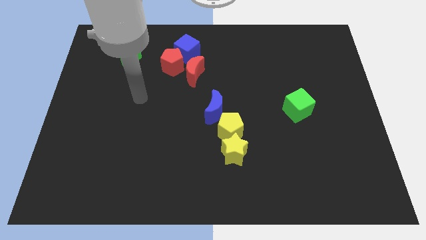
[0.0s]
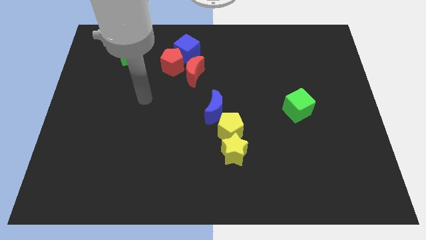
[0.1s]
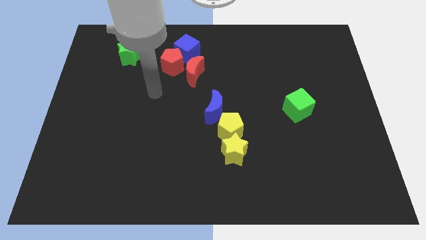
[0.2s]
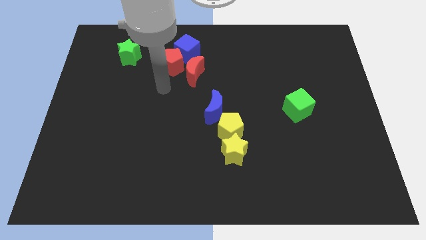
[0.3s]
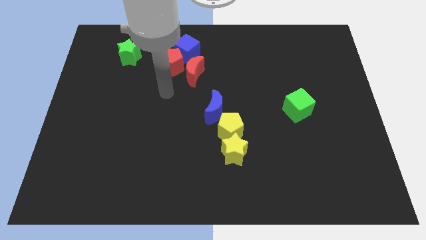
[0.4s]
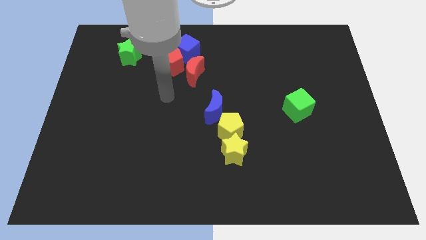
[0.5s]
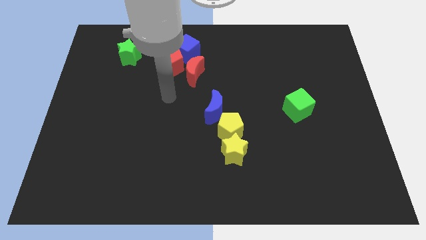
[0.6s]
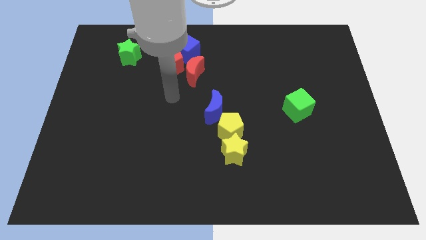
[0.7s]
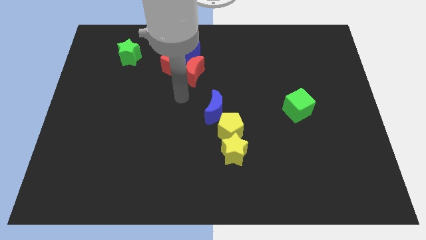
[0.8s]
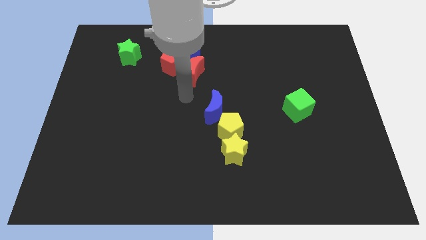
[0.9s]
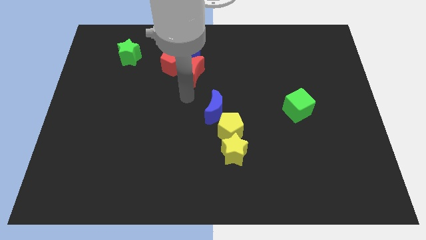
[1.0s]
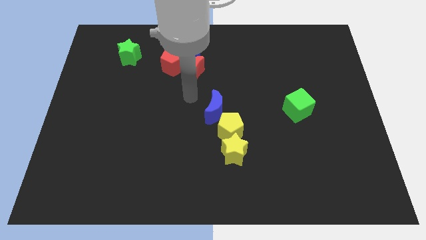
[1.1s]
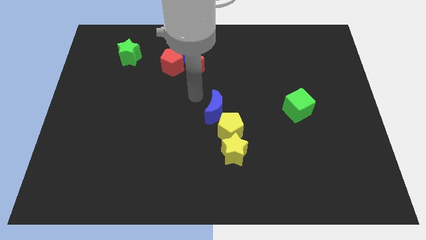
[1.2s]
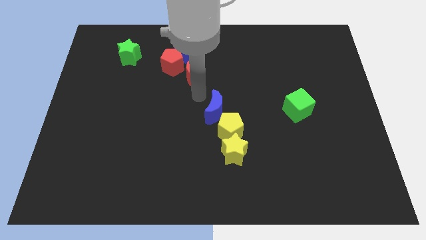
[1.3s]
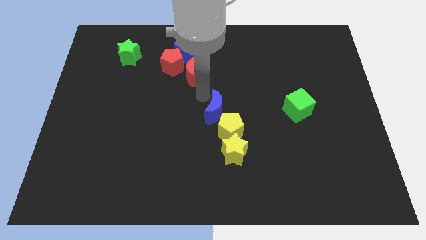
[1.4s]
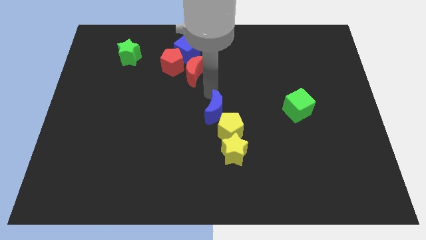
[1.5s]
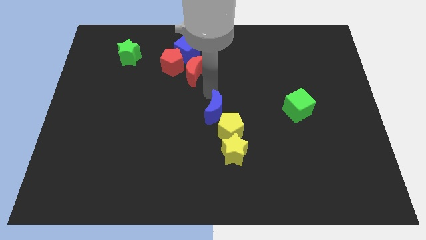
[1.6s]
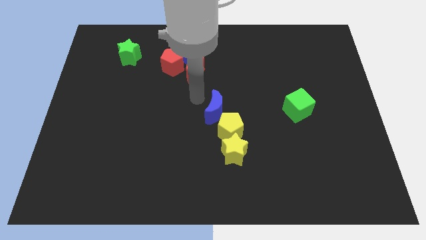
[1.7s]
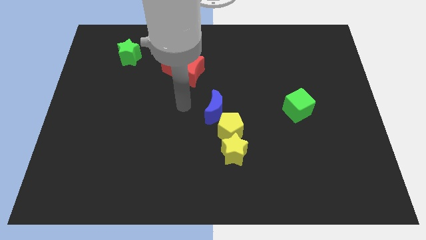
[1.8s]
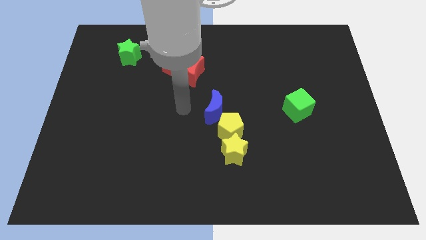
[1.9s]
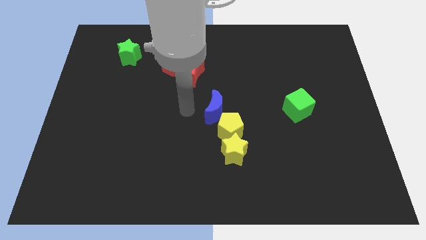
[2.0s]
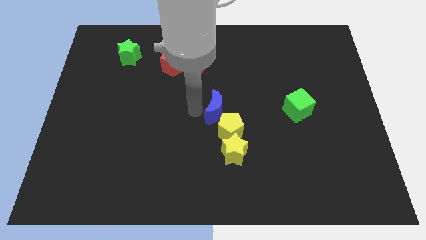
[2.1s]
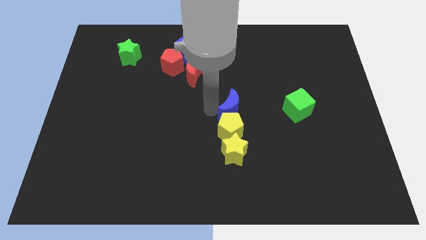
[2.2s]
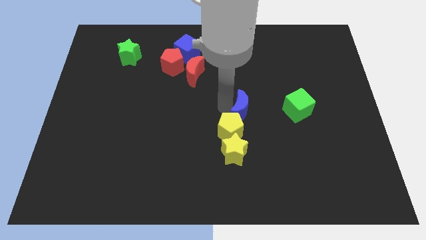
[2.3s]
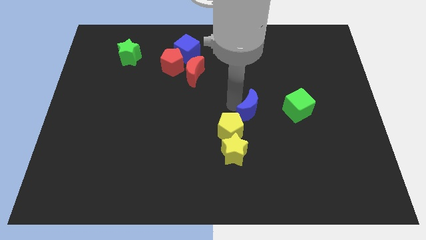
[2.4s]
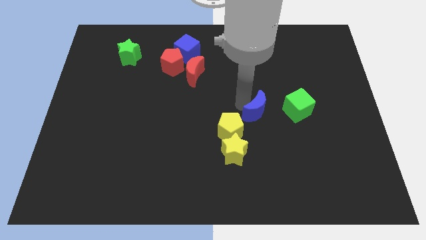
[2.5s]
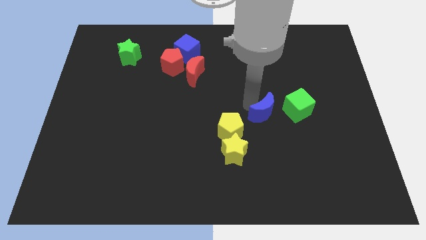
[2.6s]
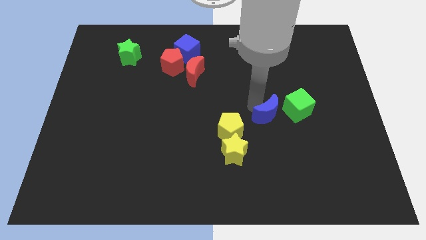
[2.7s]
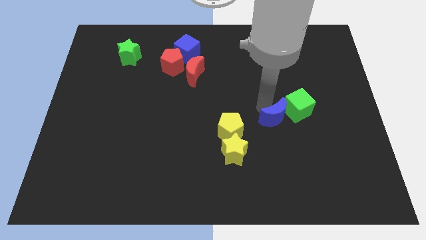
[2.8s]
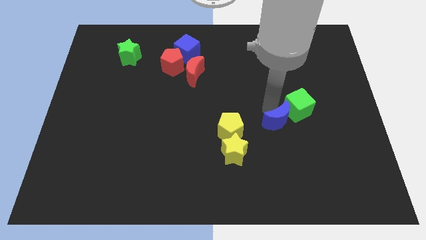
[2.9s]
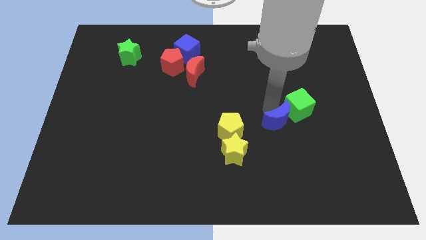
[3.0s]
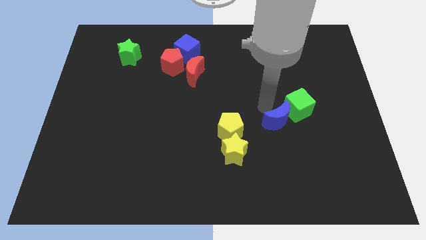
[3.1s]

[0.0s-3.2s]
push the blue moon into the green cube

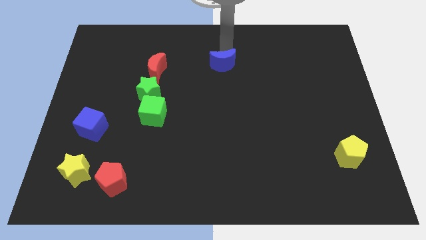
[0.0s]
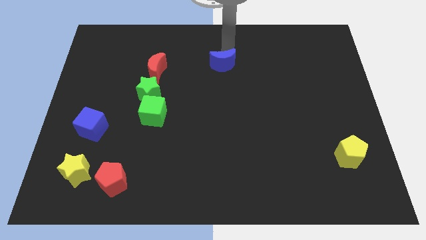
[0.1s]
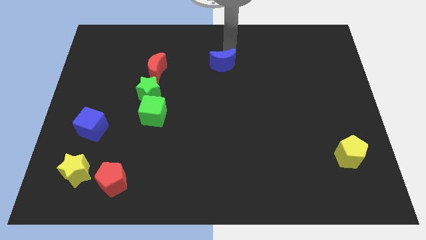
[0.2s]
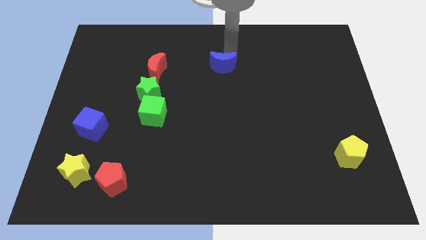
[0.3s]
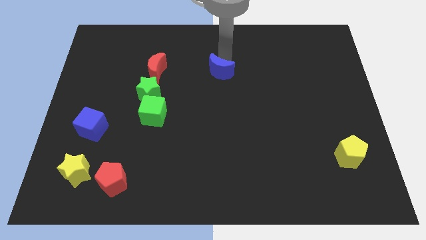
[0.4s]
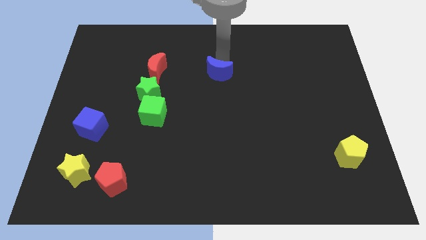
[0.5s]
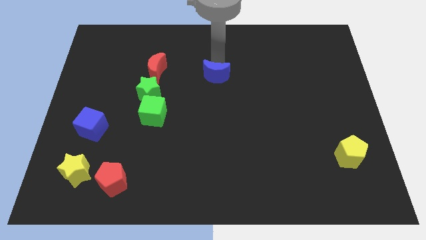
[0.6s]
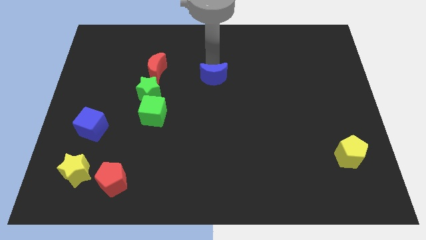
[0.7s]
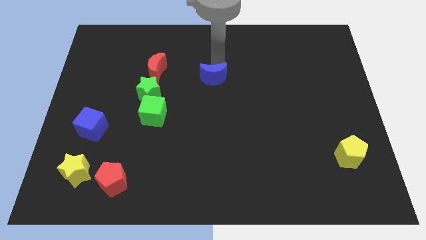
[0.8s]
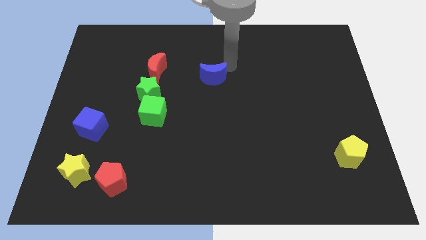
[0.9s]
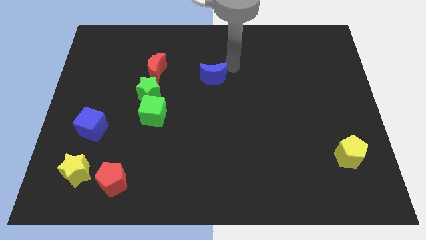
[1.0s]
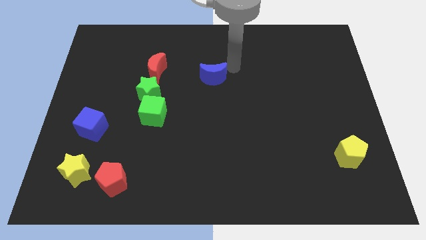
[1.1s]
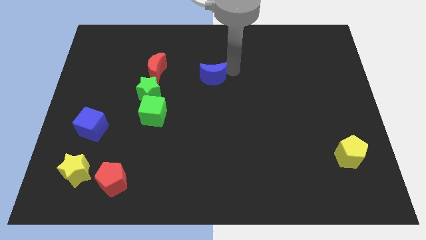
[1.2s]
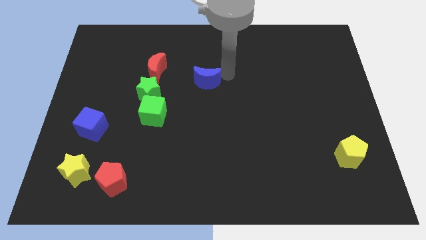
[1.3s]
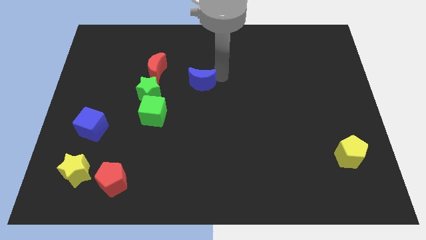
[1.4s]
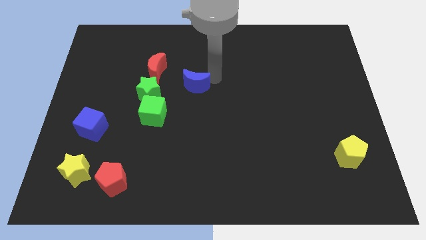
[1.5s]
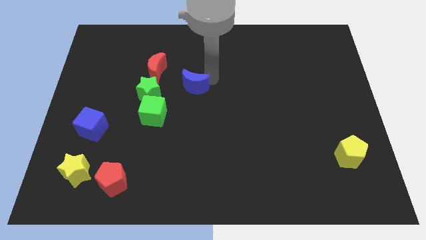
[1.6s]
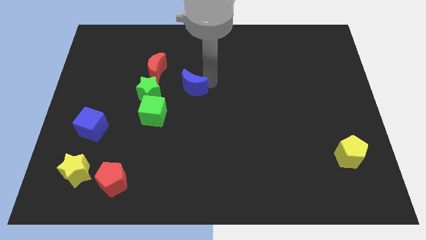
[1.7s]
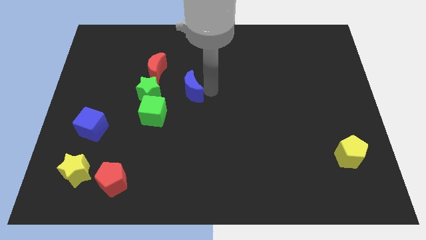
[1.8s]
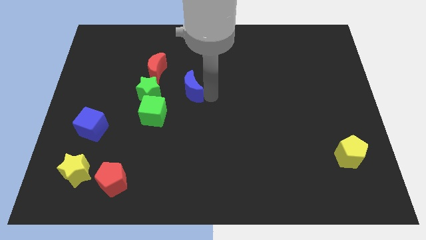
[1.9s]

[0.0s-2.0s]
push the blue moon towards right of green star

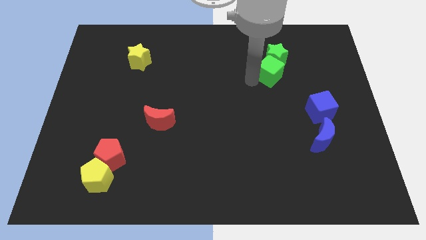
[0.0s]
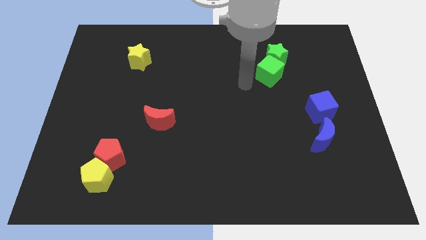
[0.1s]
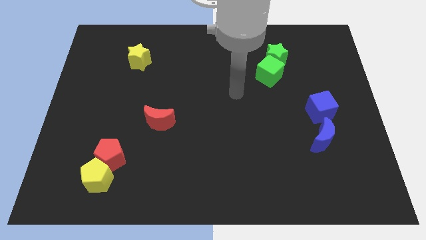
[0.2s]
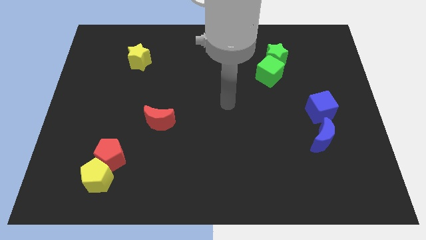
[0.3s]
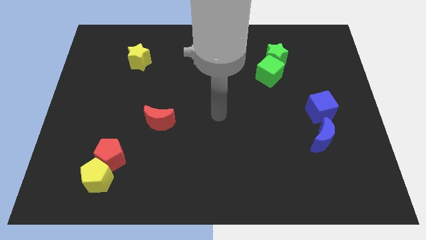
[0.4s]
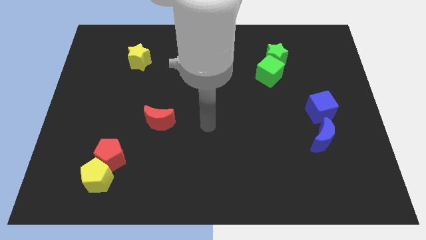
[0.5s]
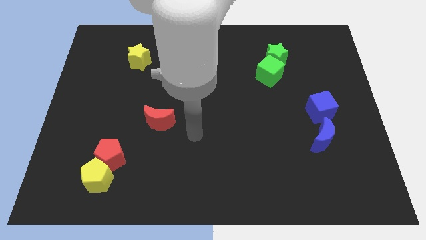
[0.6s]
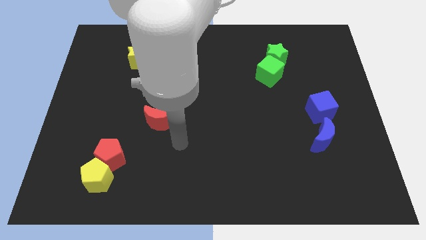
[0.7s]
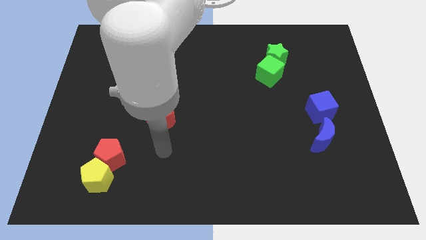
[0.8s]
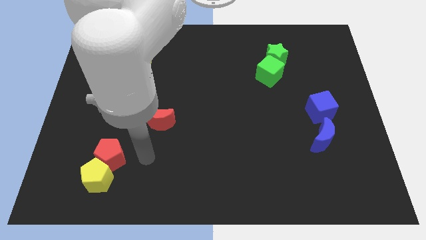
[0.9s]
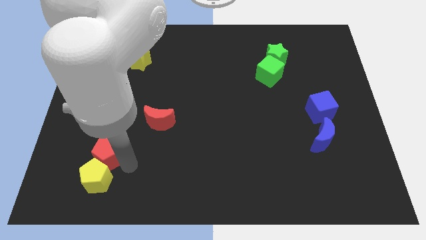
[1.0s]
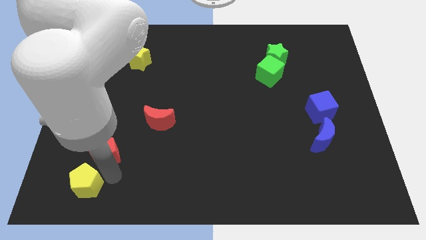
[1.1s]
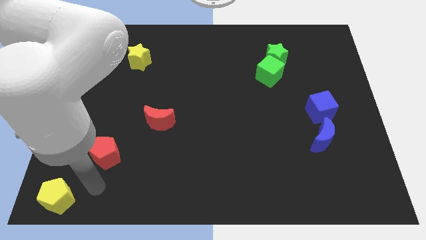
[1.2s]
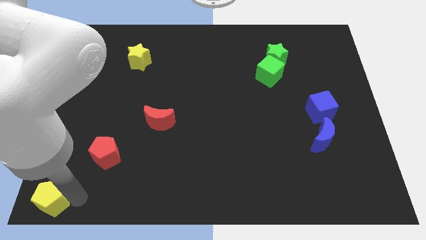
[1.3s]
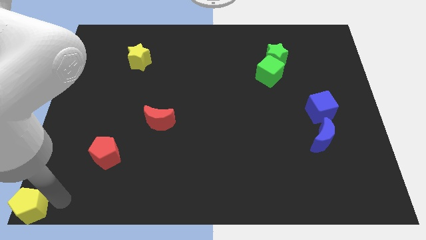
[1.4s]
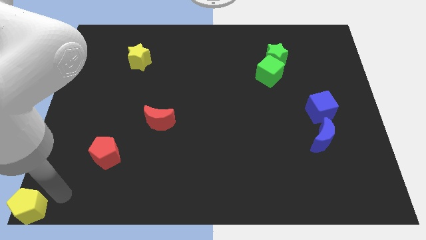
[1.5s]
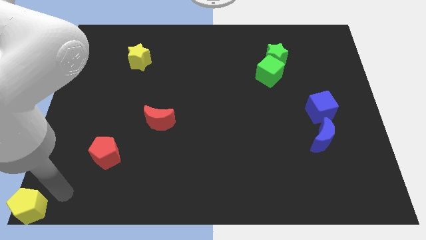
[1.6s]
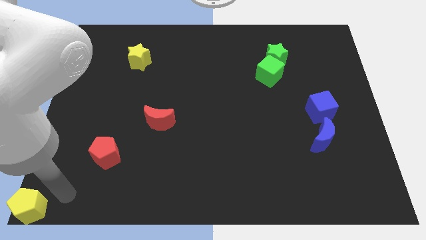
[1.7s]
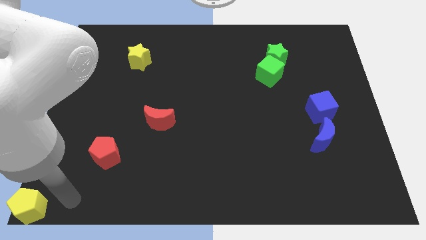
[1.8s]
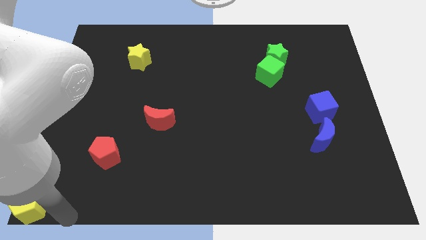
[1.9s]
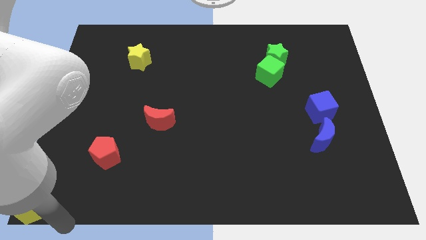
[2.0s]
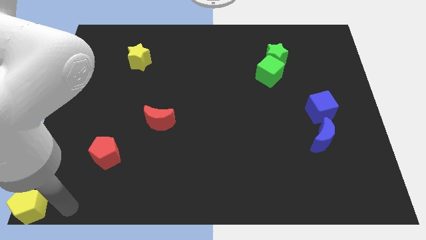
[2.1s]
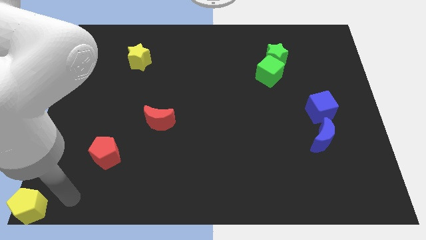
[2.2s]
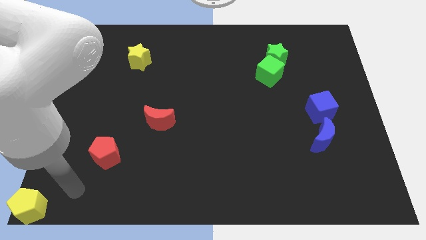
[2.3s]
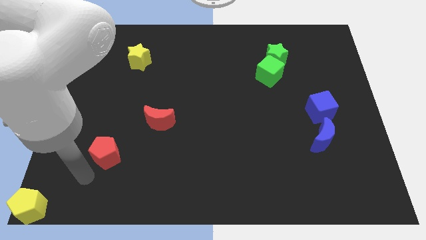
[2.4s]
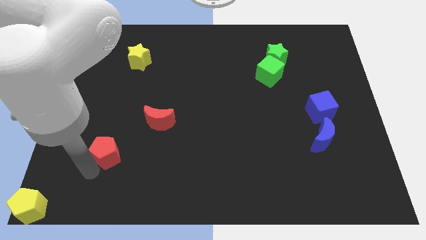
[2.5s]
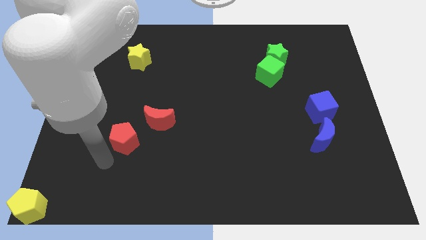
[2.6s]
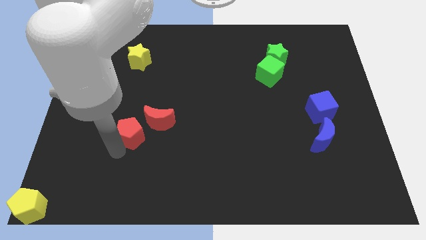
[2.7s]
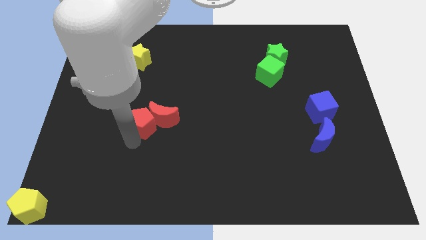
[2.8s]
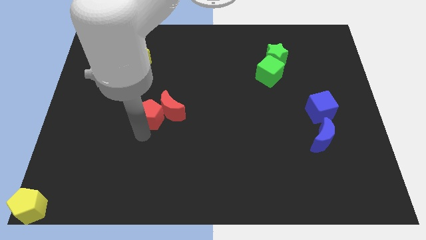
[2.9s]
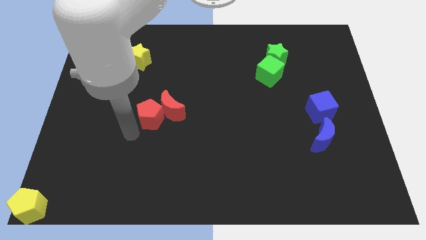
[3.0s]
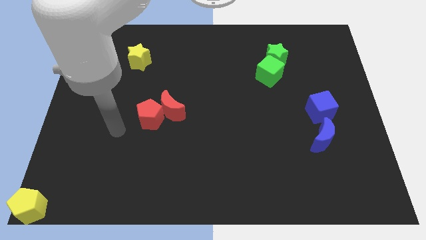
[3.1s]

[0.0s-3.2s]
separate the red and yellow pentagons from each other

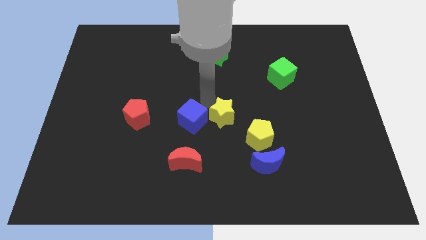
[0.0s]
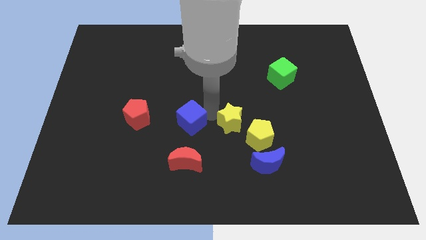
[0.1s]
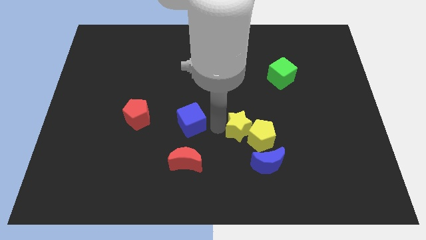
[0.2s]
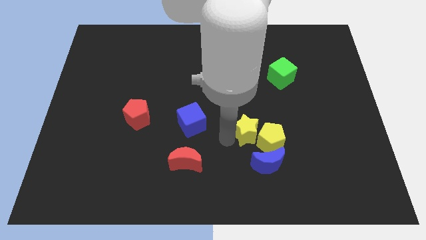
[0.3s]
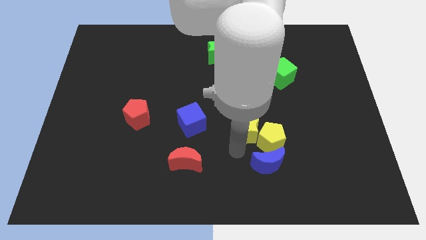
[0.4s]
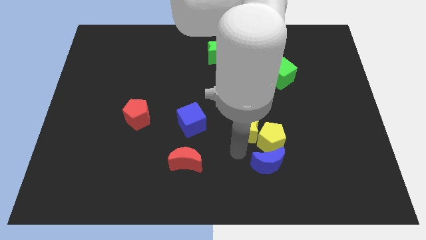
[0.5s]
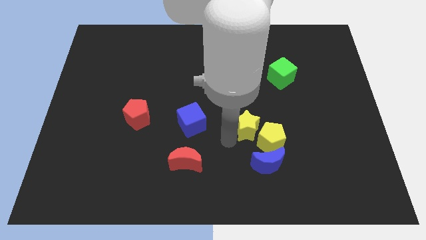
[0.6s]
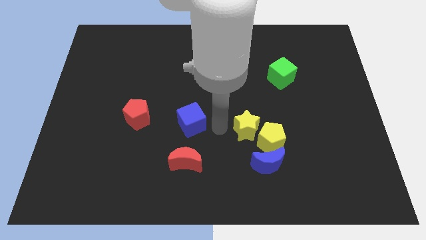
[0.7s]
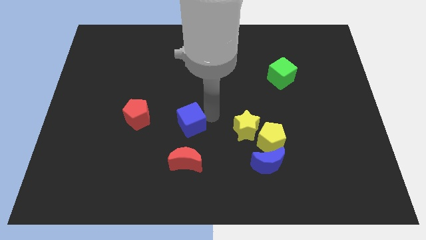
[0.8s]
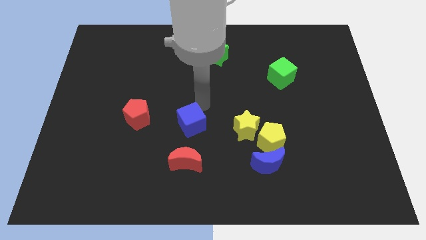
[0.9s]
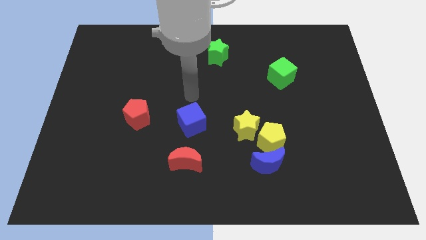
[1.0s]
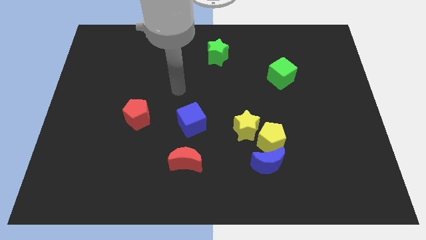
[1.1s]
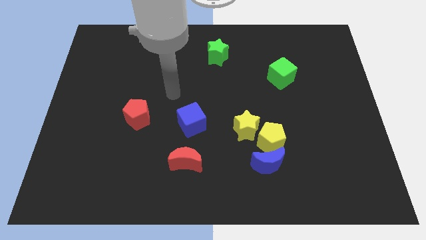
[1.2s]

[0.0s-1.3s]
push the yellow star into the yellow pentagon
